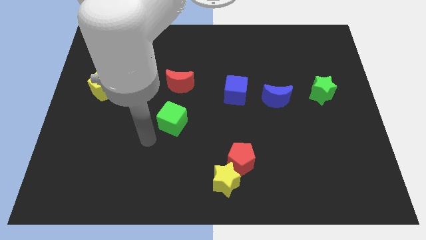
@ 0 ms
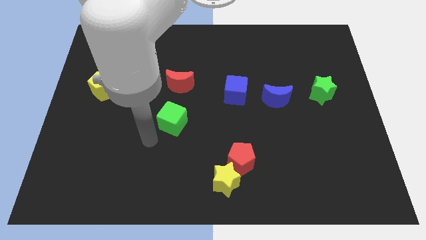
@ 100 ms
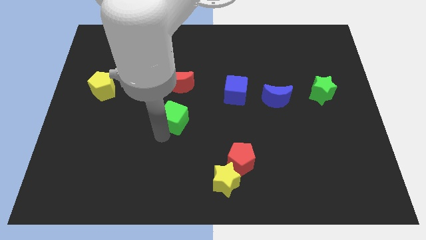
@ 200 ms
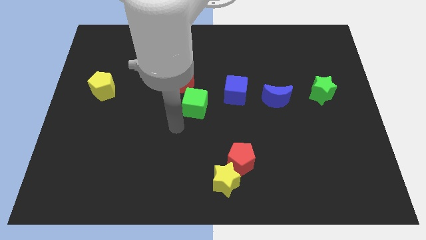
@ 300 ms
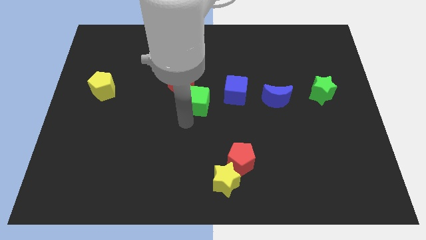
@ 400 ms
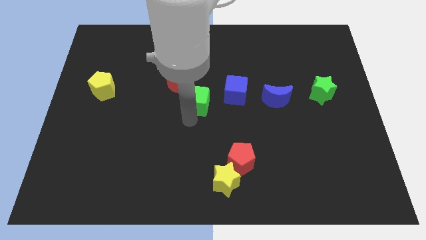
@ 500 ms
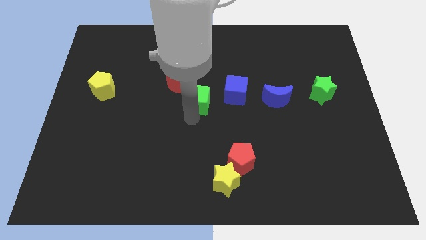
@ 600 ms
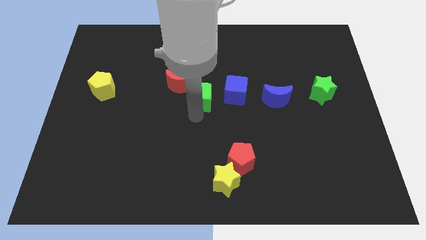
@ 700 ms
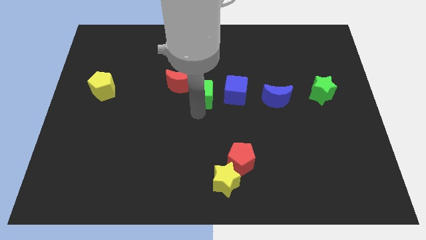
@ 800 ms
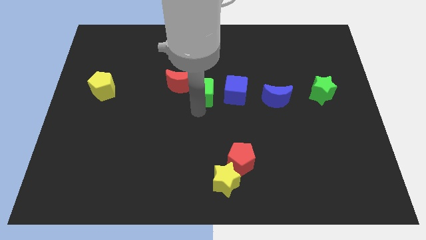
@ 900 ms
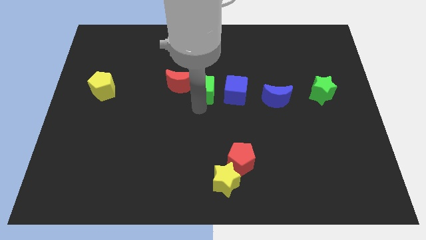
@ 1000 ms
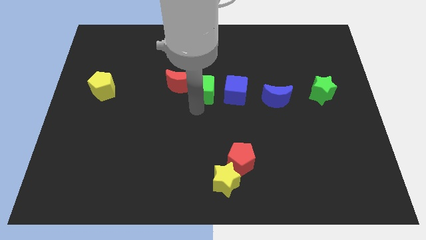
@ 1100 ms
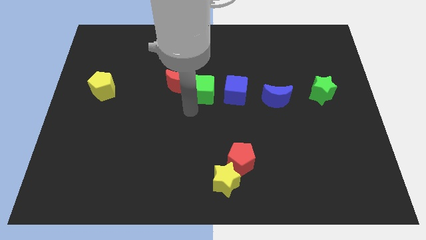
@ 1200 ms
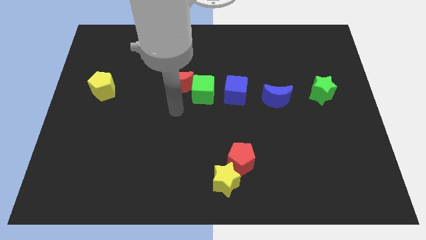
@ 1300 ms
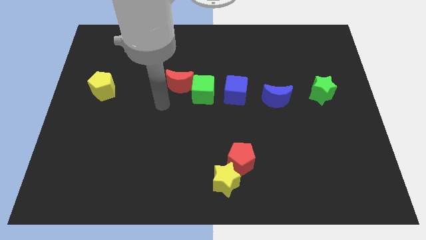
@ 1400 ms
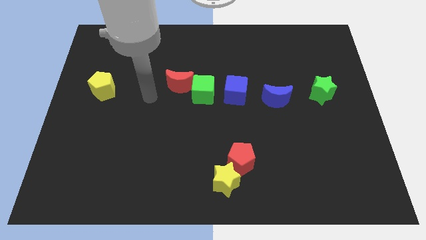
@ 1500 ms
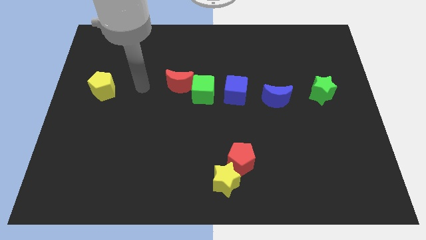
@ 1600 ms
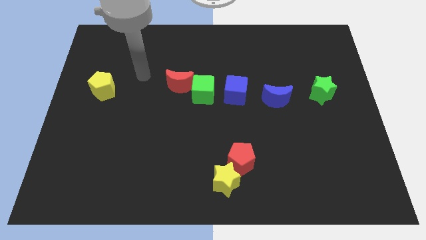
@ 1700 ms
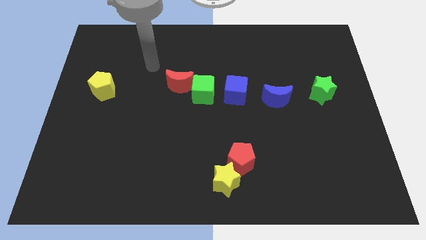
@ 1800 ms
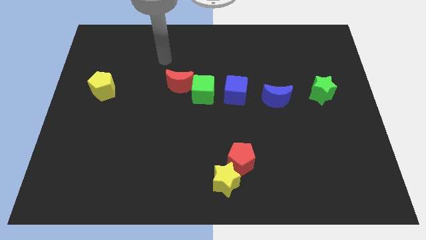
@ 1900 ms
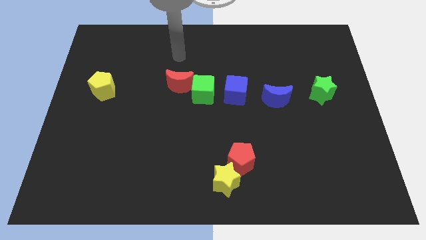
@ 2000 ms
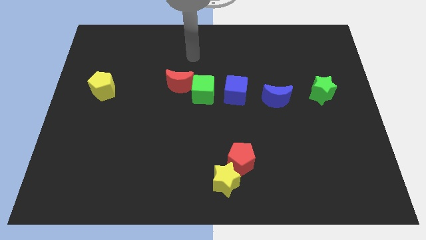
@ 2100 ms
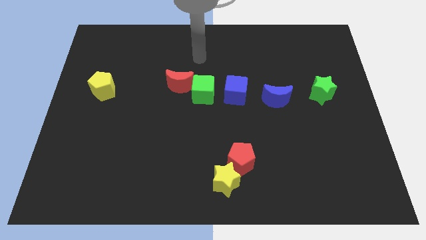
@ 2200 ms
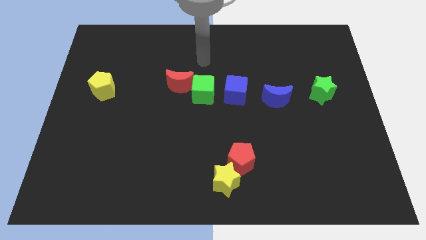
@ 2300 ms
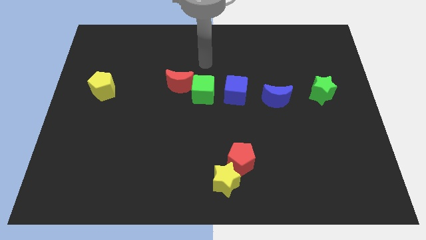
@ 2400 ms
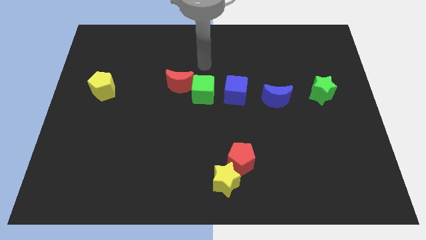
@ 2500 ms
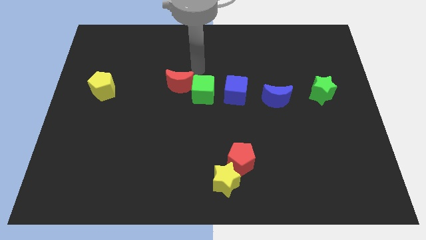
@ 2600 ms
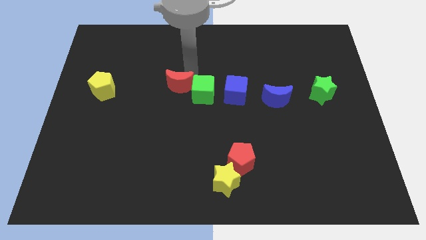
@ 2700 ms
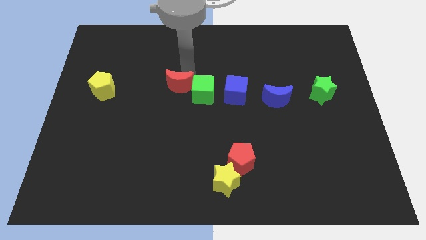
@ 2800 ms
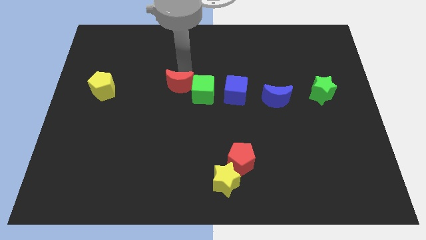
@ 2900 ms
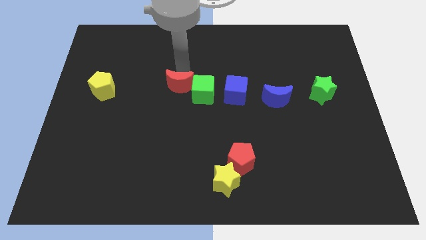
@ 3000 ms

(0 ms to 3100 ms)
place the arm above the red moon

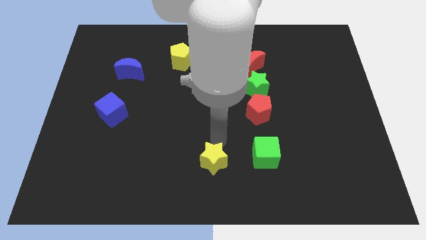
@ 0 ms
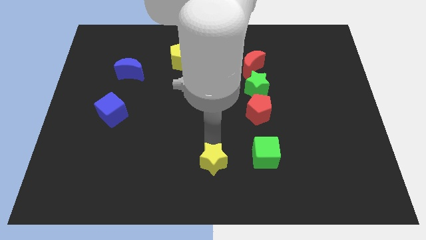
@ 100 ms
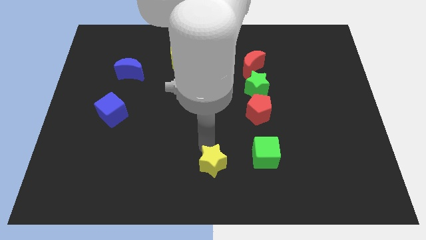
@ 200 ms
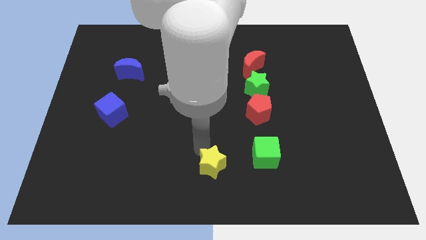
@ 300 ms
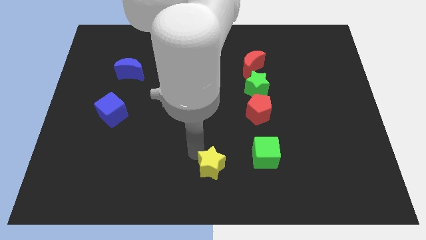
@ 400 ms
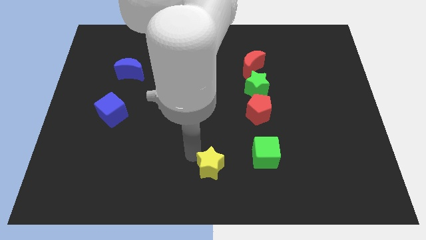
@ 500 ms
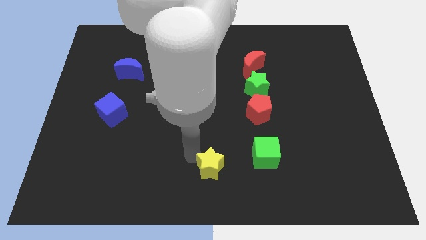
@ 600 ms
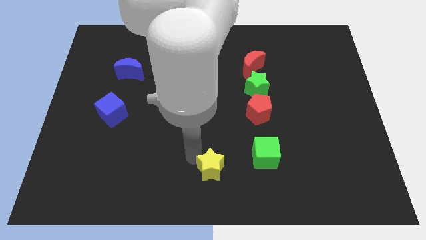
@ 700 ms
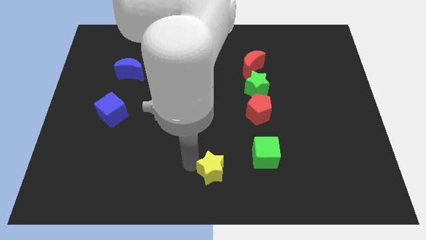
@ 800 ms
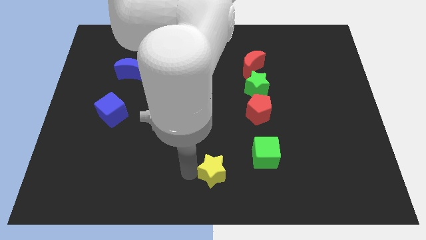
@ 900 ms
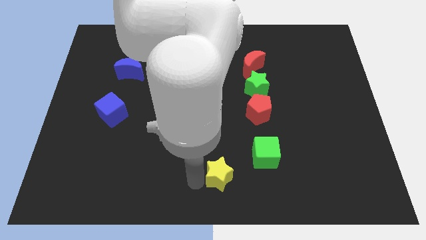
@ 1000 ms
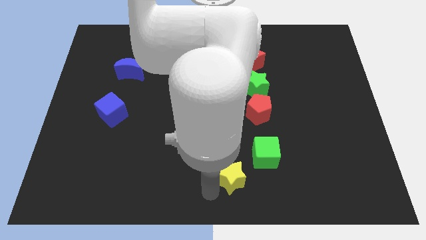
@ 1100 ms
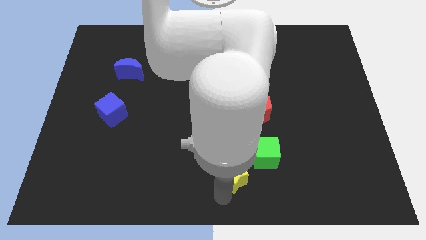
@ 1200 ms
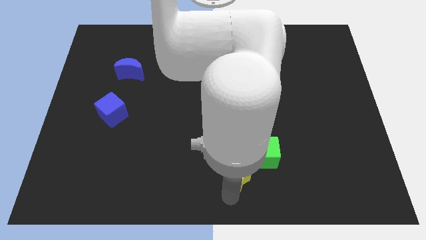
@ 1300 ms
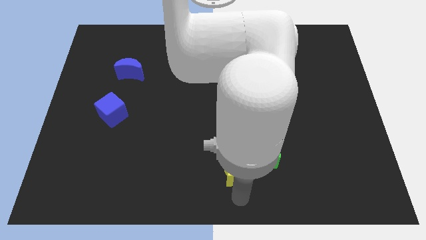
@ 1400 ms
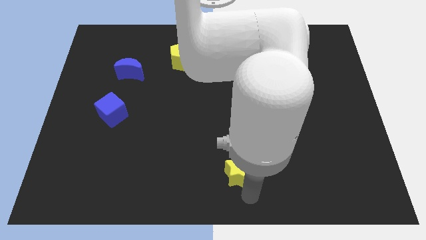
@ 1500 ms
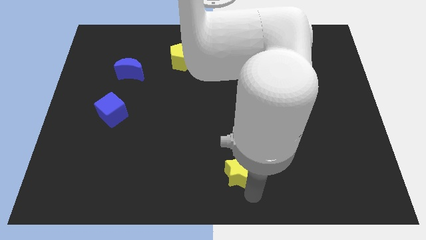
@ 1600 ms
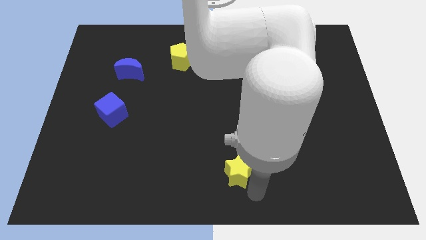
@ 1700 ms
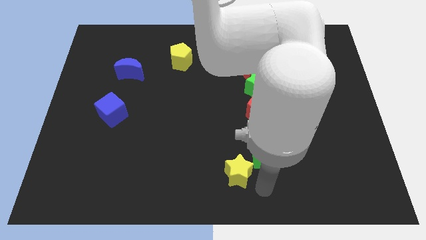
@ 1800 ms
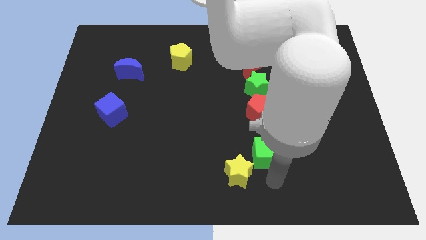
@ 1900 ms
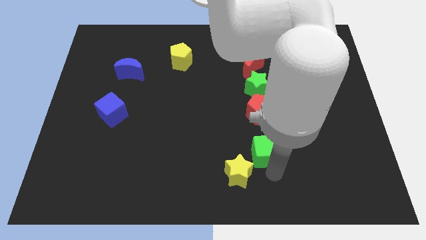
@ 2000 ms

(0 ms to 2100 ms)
move the yellow star close to the green cube

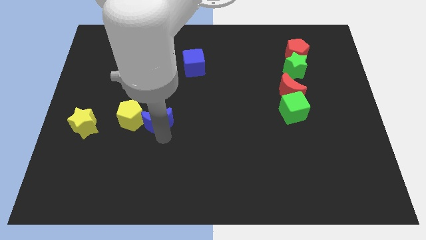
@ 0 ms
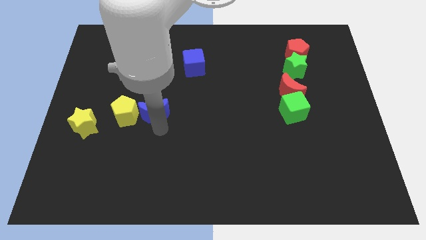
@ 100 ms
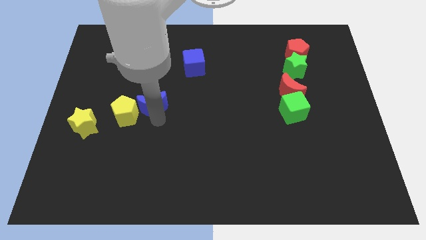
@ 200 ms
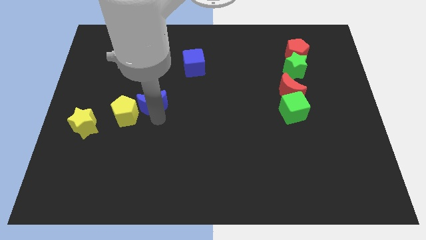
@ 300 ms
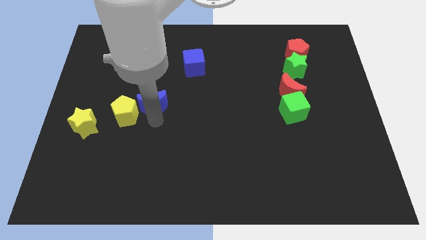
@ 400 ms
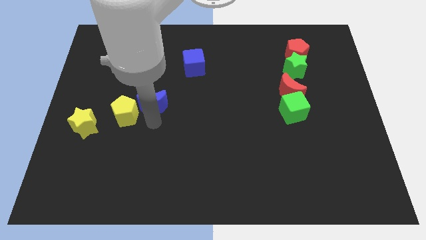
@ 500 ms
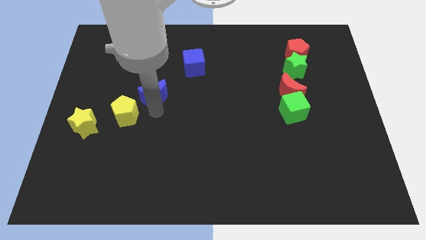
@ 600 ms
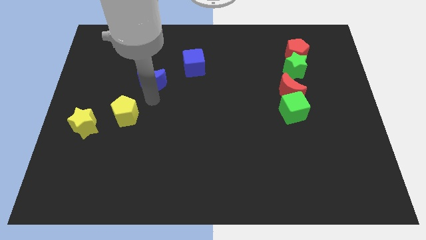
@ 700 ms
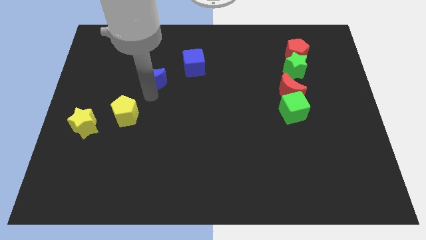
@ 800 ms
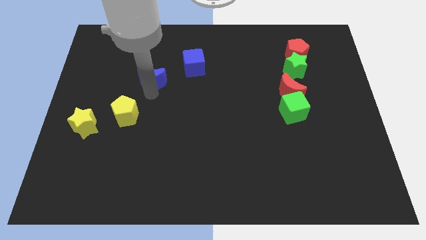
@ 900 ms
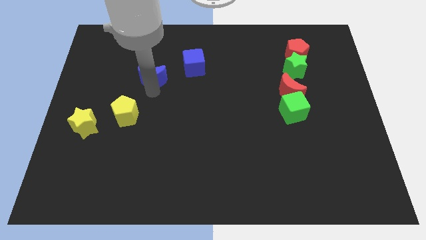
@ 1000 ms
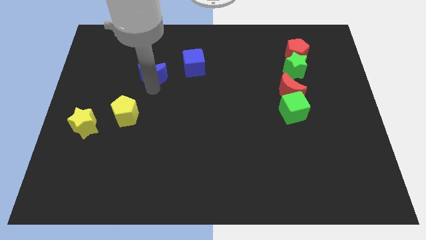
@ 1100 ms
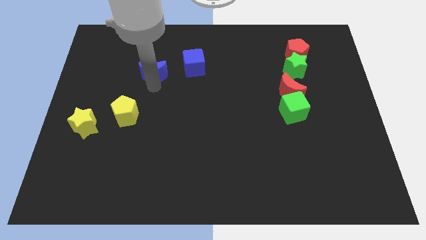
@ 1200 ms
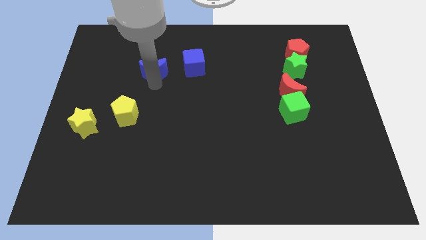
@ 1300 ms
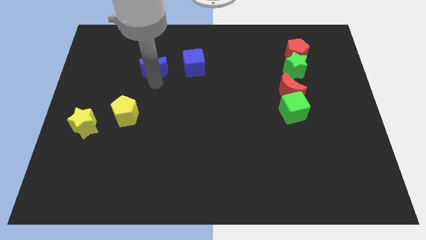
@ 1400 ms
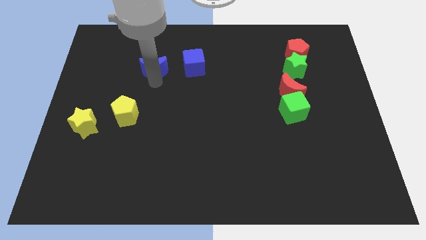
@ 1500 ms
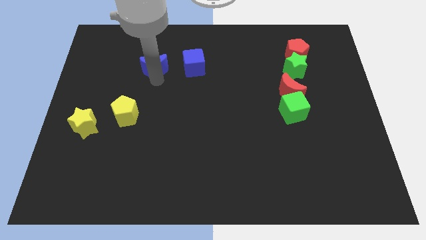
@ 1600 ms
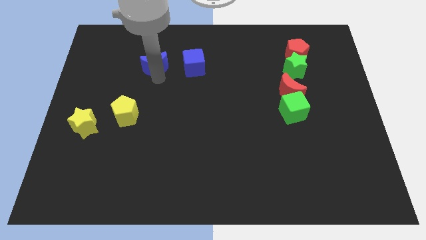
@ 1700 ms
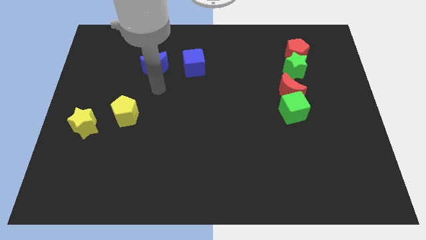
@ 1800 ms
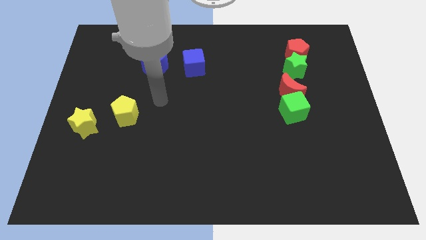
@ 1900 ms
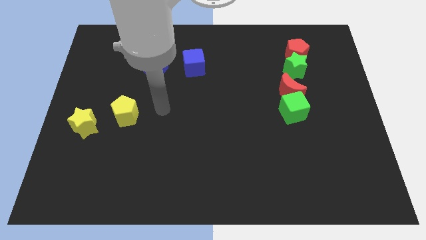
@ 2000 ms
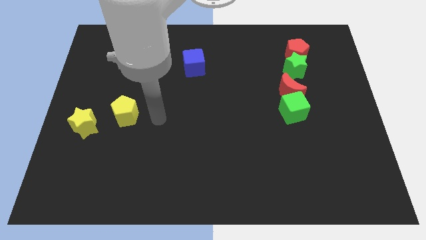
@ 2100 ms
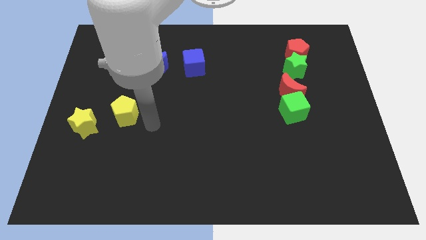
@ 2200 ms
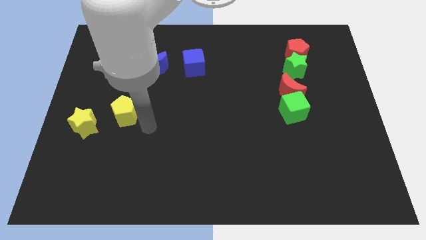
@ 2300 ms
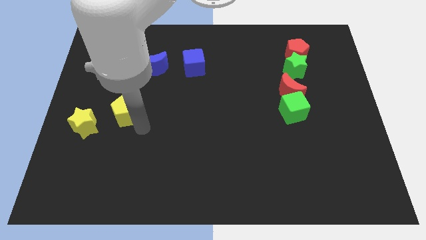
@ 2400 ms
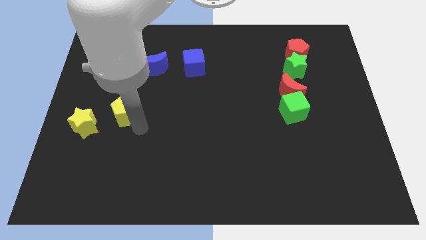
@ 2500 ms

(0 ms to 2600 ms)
place the blue moon parallel to the blue cube

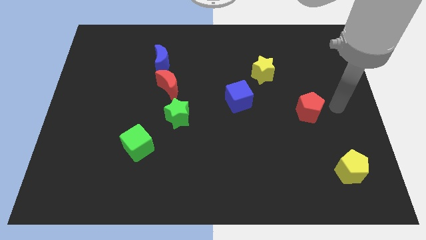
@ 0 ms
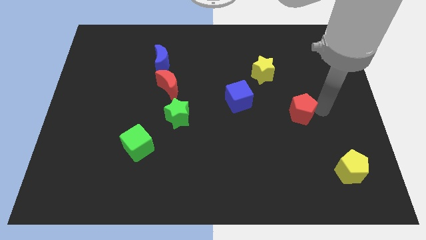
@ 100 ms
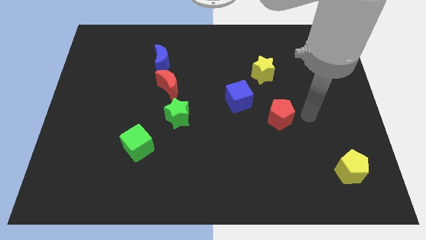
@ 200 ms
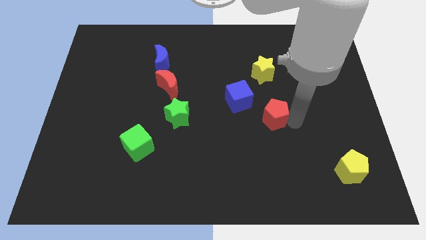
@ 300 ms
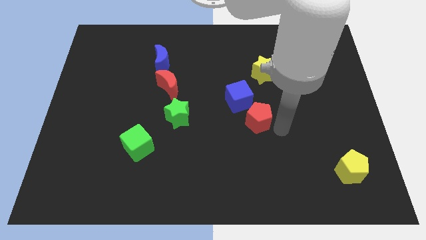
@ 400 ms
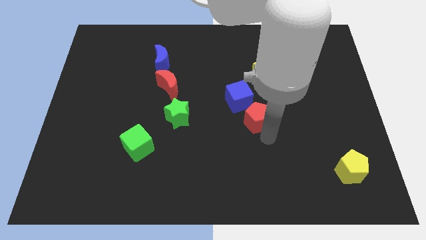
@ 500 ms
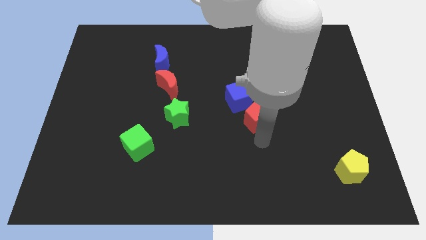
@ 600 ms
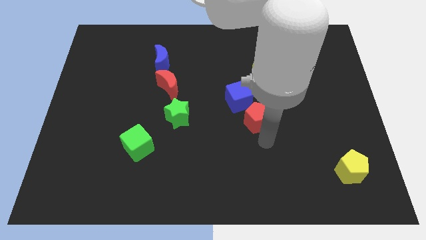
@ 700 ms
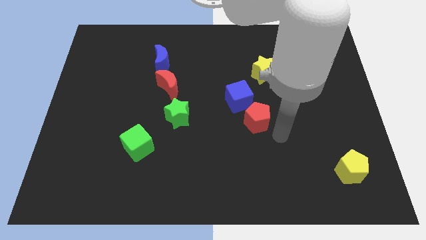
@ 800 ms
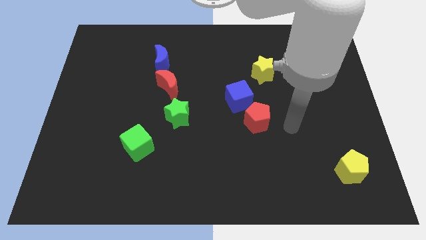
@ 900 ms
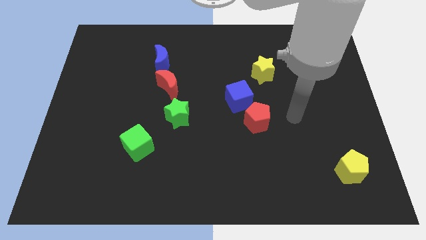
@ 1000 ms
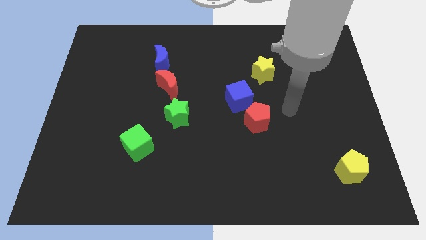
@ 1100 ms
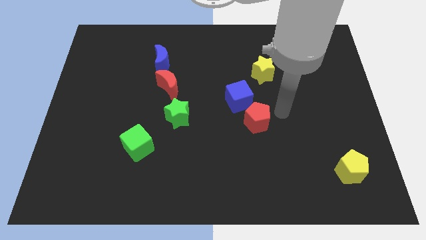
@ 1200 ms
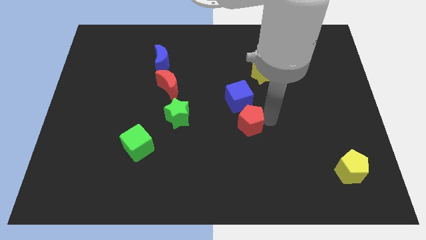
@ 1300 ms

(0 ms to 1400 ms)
push the red pentagon to the bottom of the blue cube
